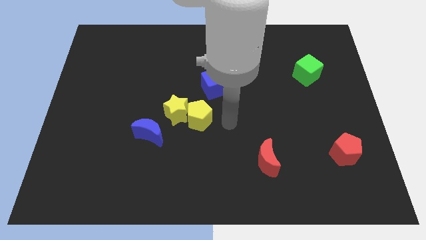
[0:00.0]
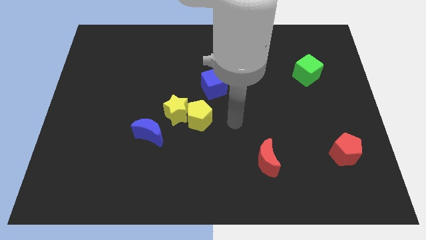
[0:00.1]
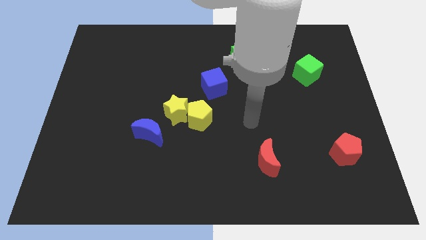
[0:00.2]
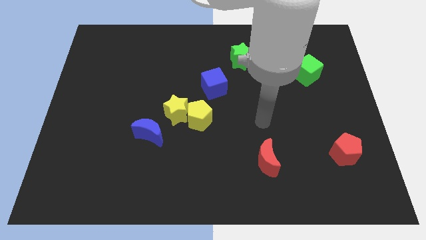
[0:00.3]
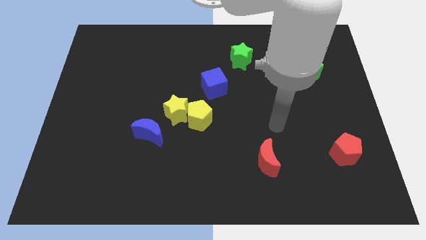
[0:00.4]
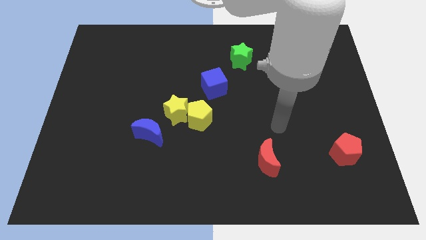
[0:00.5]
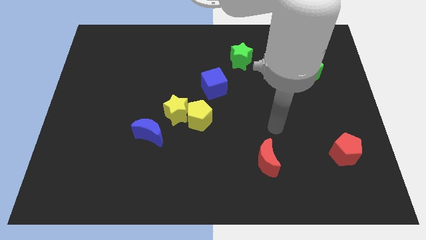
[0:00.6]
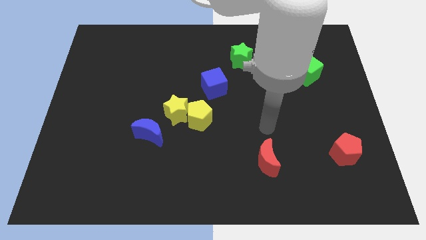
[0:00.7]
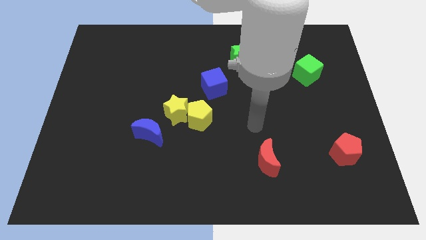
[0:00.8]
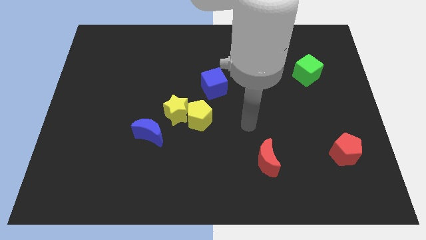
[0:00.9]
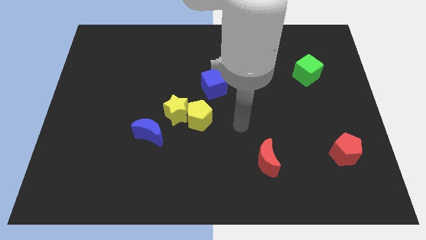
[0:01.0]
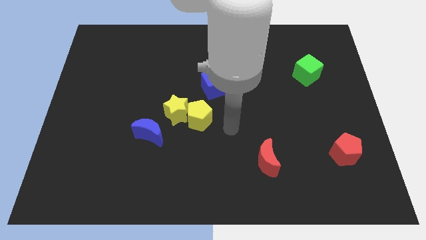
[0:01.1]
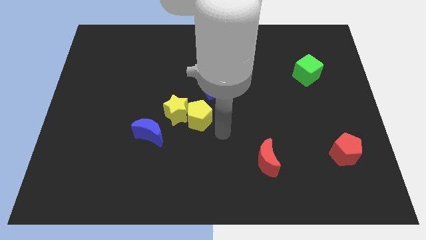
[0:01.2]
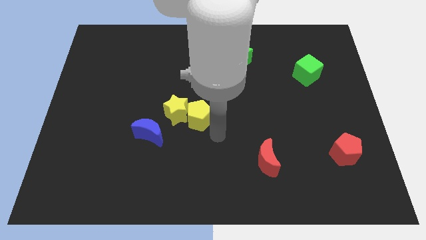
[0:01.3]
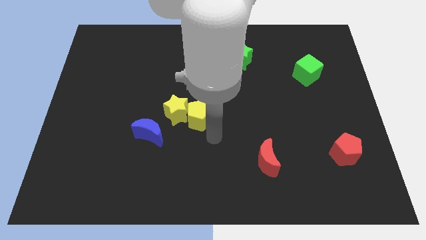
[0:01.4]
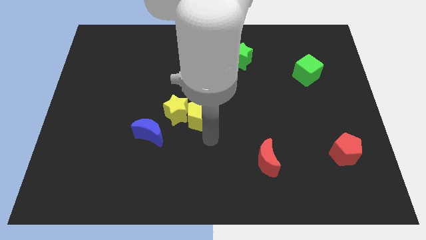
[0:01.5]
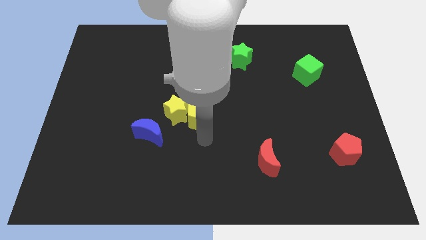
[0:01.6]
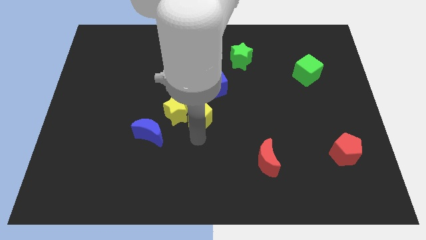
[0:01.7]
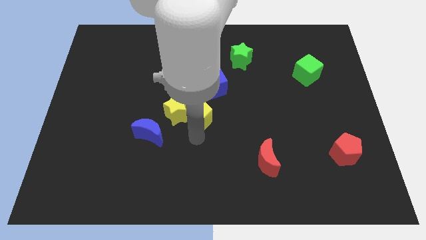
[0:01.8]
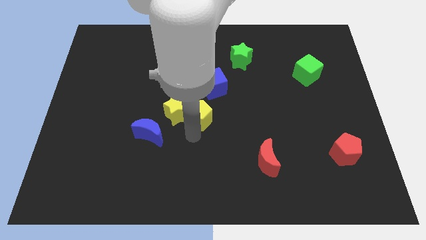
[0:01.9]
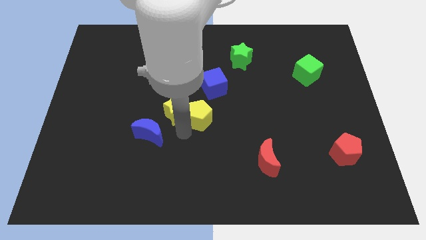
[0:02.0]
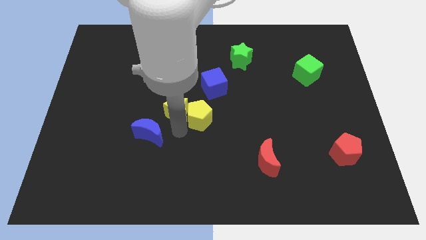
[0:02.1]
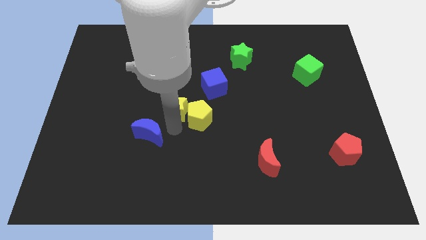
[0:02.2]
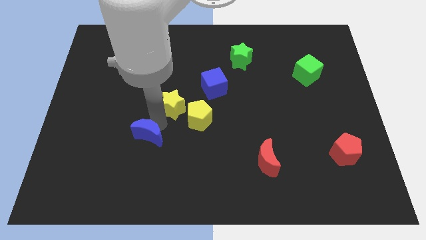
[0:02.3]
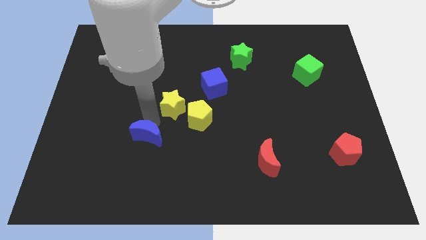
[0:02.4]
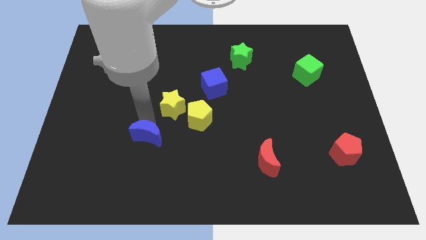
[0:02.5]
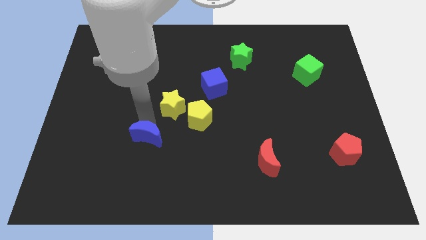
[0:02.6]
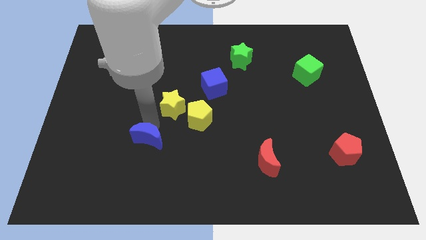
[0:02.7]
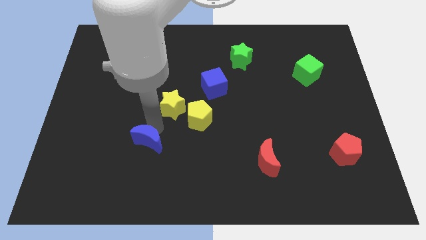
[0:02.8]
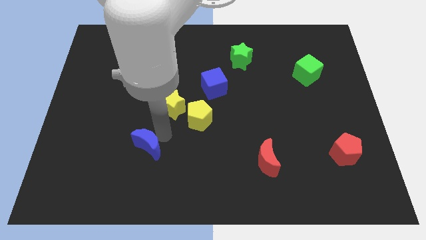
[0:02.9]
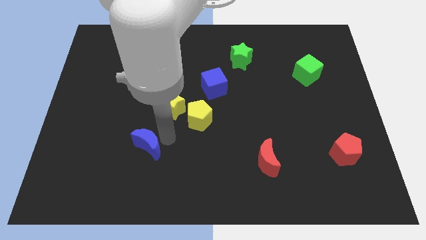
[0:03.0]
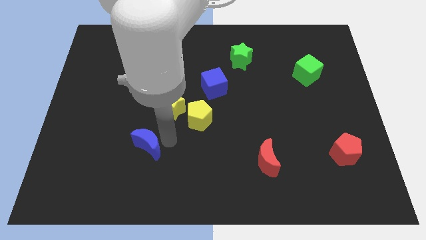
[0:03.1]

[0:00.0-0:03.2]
move the blue moon diagonally on the bottom left side of the yellow star

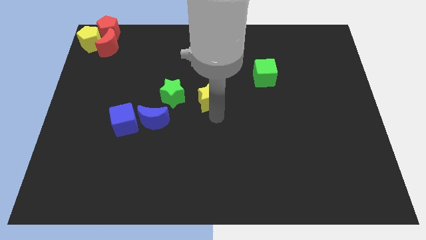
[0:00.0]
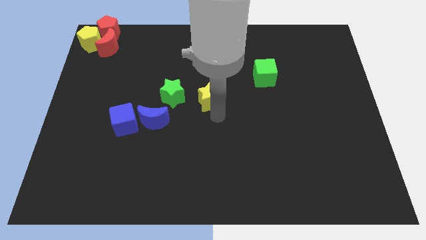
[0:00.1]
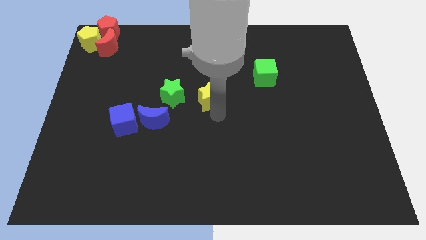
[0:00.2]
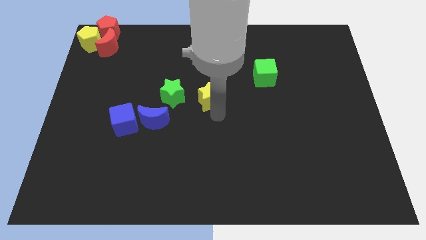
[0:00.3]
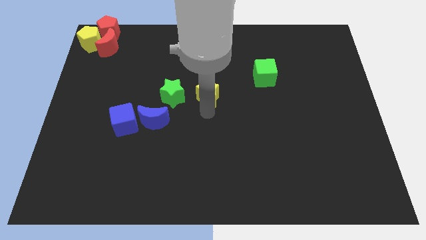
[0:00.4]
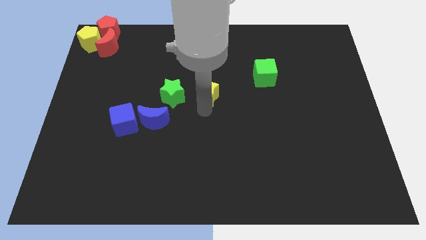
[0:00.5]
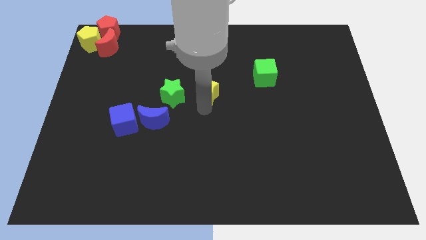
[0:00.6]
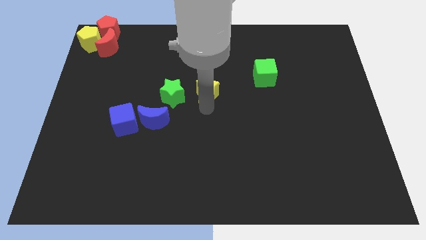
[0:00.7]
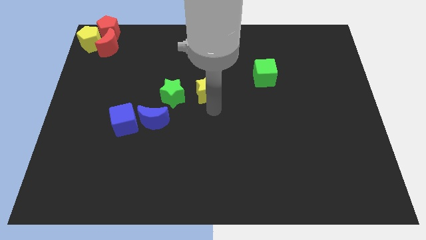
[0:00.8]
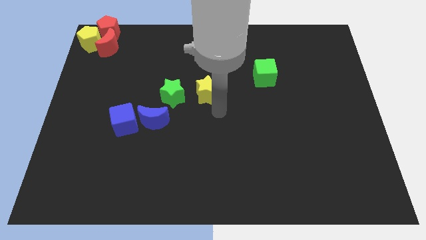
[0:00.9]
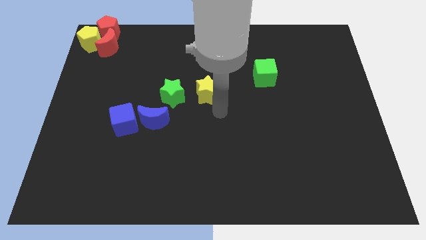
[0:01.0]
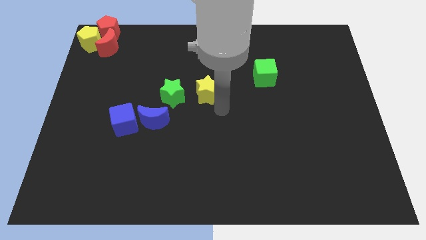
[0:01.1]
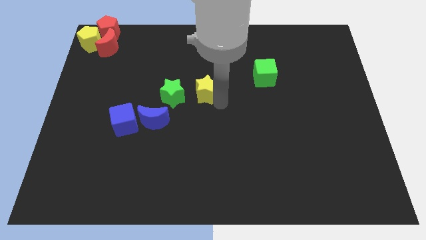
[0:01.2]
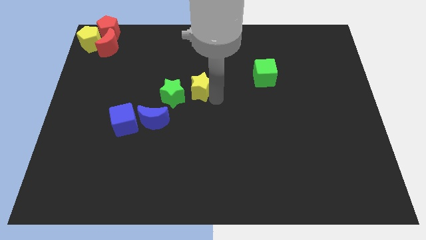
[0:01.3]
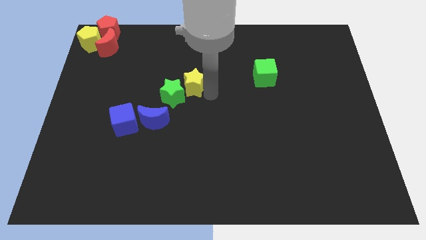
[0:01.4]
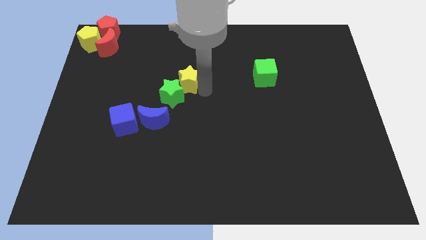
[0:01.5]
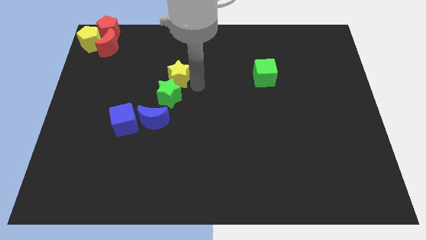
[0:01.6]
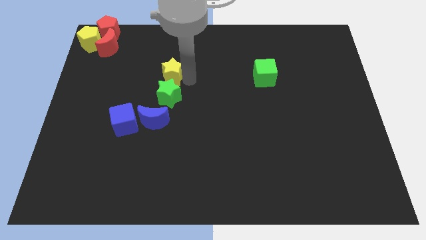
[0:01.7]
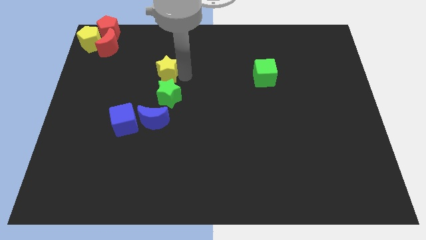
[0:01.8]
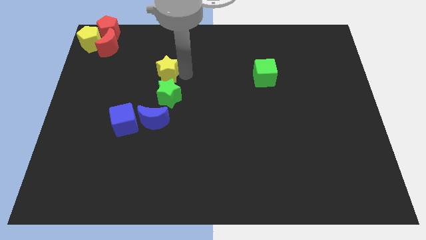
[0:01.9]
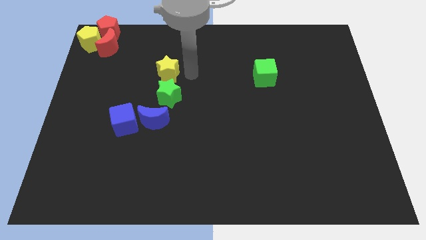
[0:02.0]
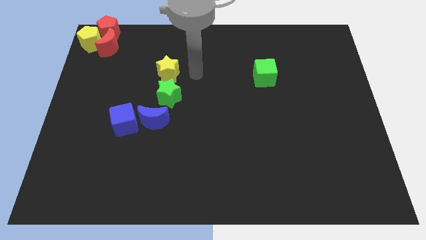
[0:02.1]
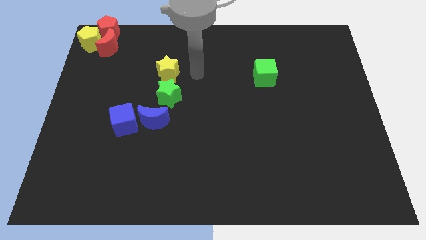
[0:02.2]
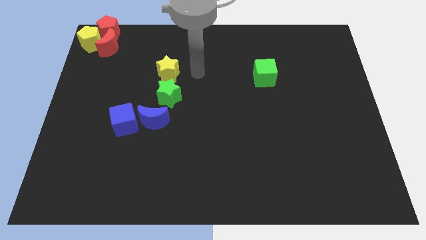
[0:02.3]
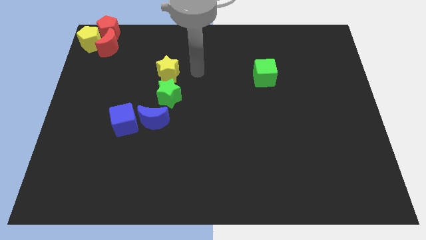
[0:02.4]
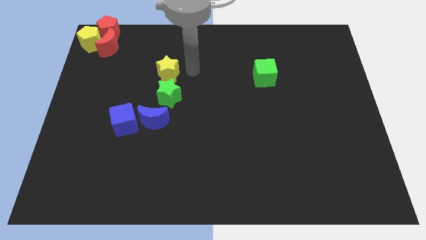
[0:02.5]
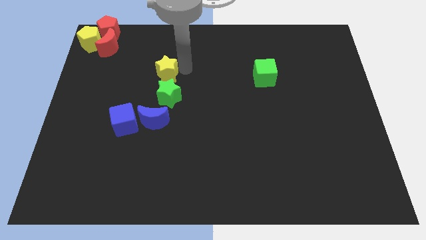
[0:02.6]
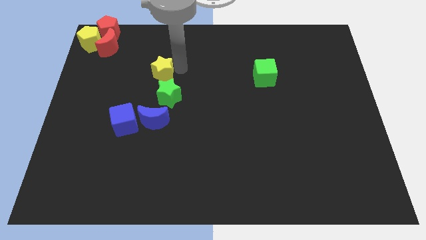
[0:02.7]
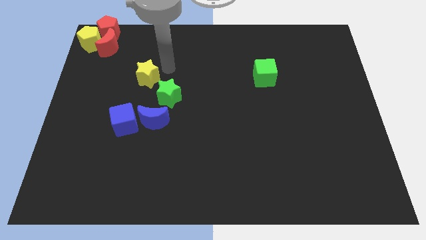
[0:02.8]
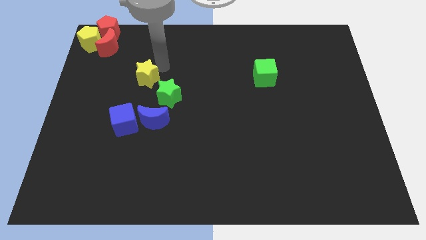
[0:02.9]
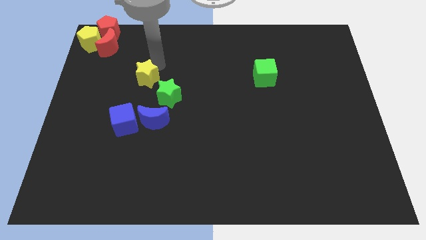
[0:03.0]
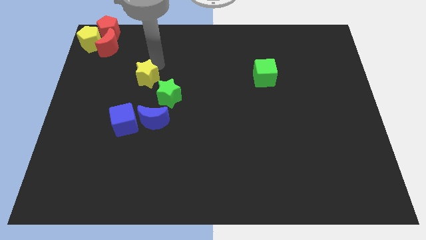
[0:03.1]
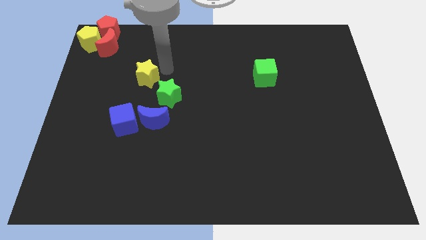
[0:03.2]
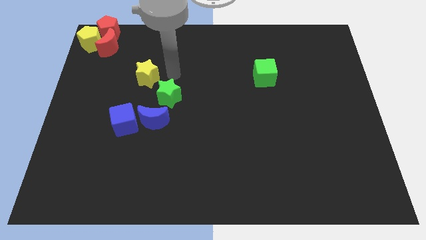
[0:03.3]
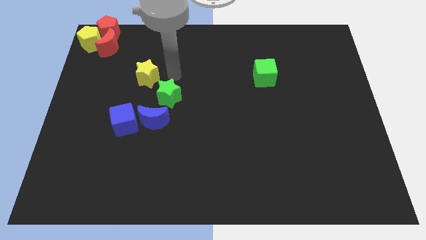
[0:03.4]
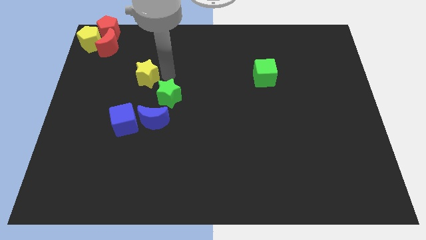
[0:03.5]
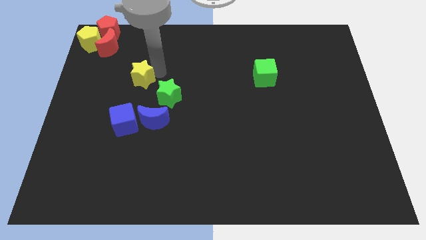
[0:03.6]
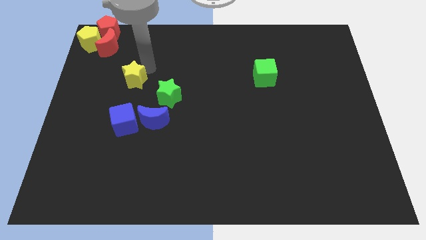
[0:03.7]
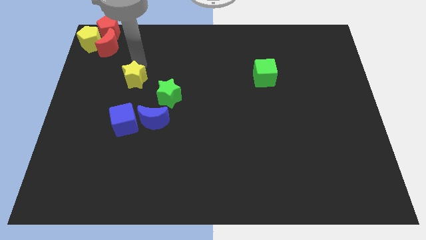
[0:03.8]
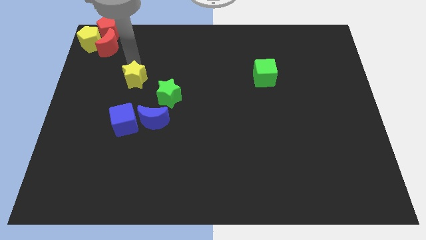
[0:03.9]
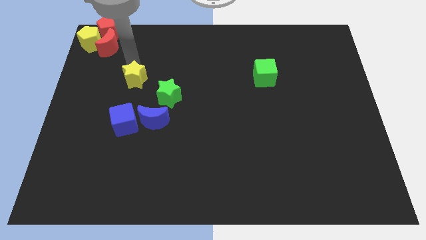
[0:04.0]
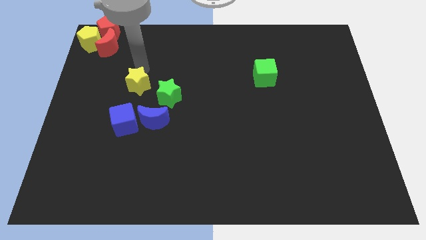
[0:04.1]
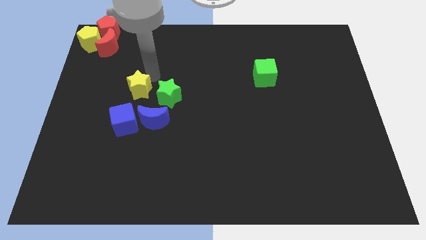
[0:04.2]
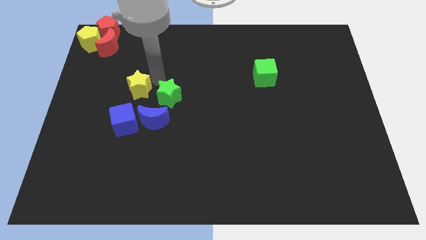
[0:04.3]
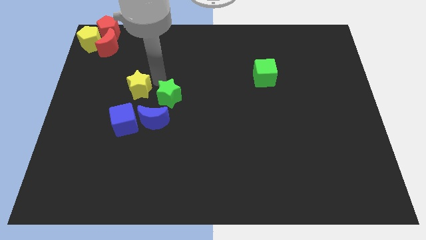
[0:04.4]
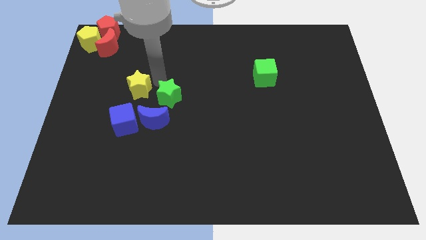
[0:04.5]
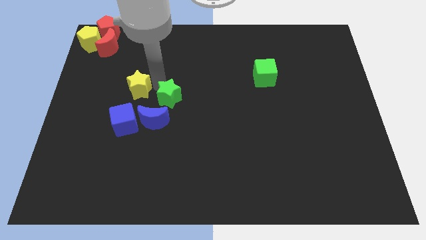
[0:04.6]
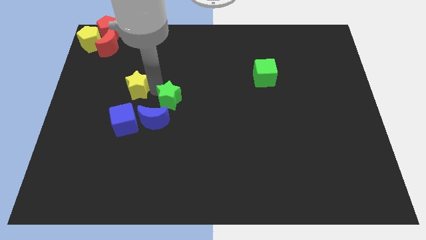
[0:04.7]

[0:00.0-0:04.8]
place yellow star to the top of blue moon

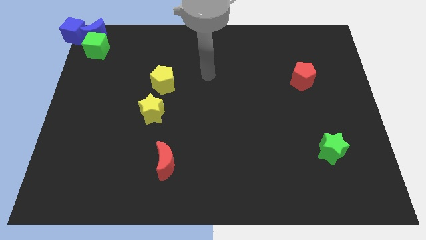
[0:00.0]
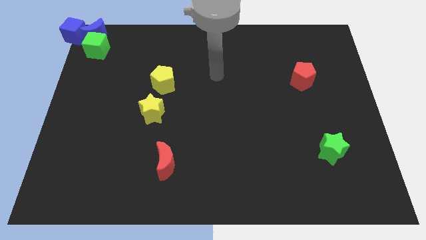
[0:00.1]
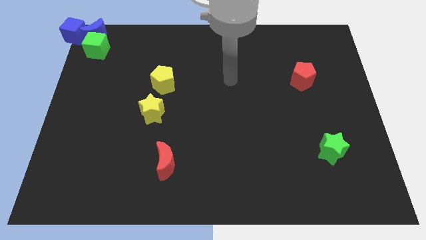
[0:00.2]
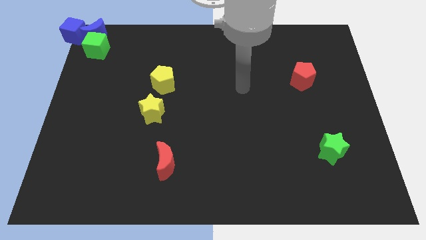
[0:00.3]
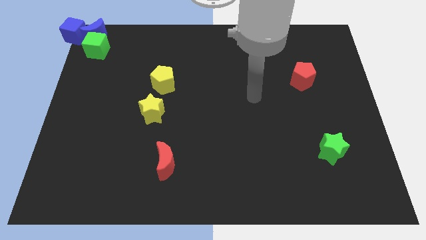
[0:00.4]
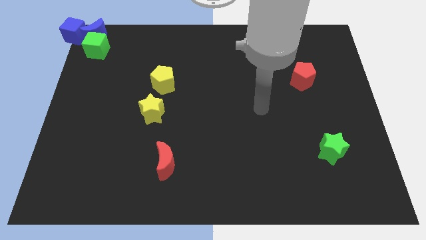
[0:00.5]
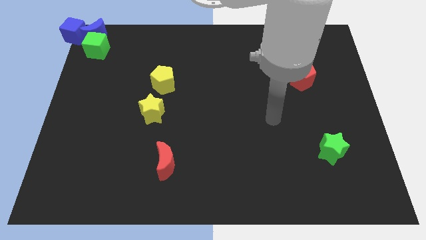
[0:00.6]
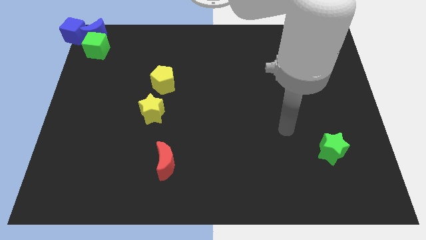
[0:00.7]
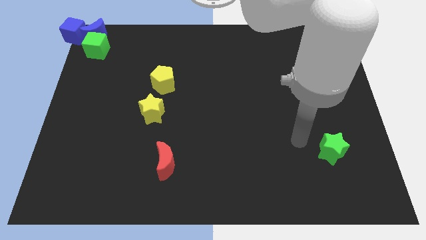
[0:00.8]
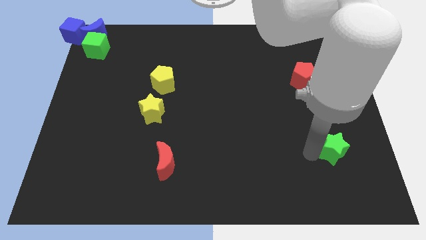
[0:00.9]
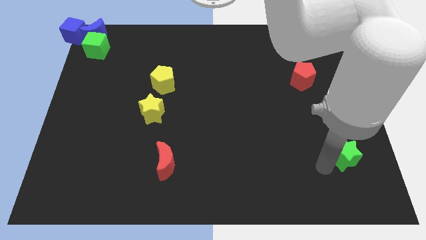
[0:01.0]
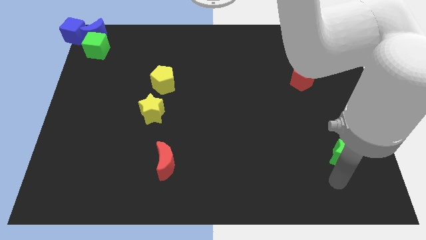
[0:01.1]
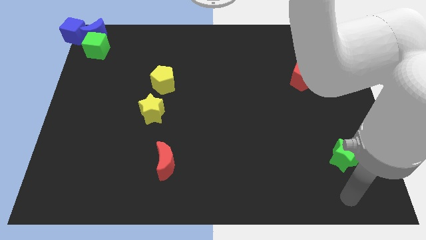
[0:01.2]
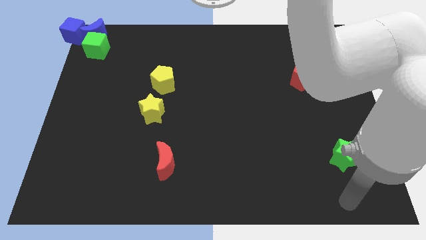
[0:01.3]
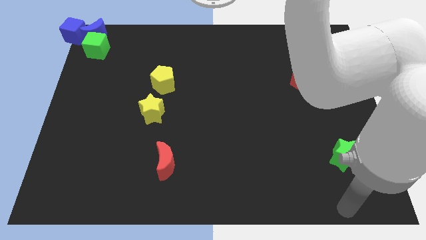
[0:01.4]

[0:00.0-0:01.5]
move the arm towards bottom of the green star
